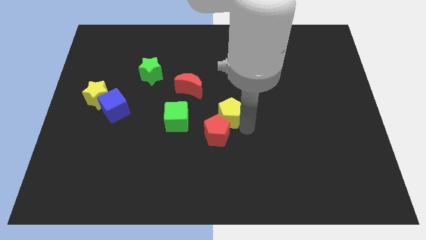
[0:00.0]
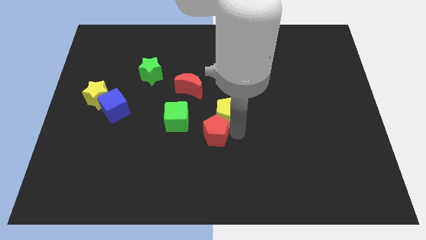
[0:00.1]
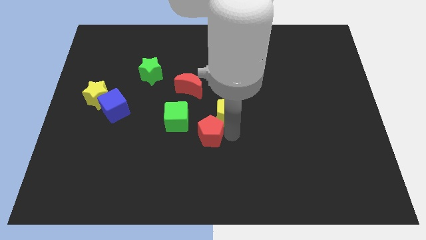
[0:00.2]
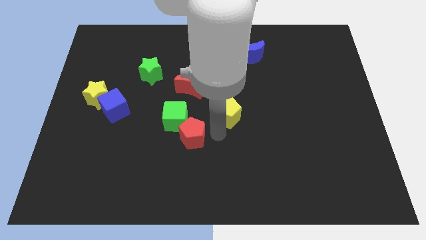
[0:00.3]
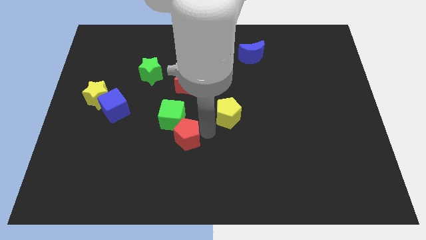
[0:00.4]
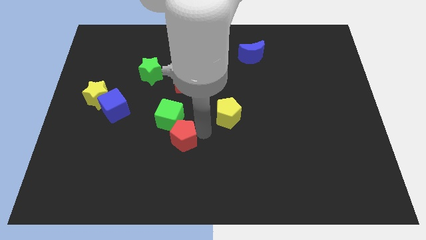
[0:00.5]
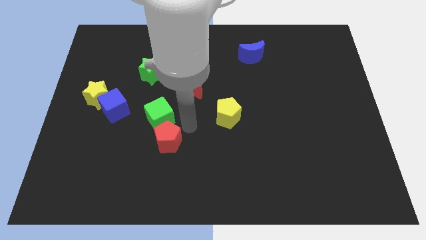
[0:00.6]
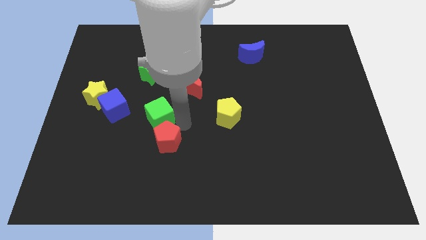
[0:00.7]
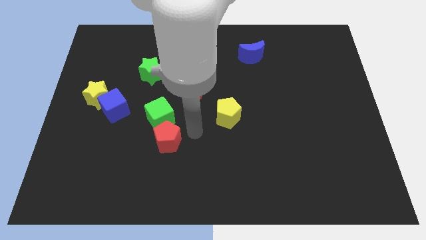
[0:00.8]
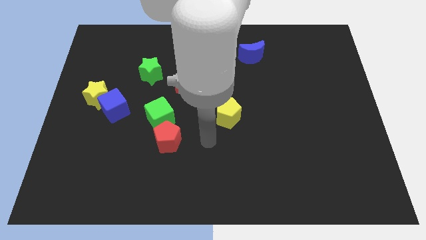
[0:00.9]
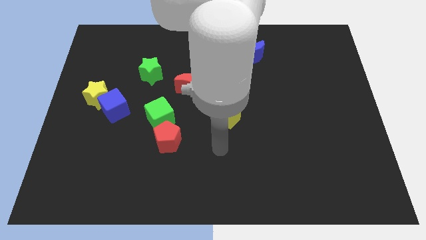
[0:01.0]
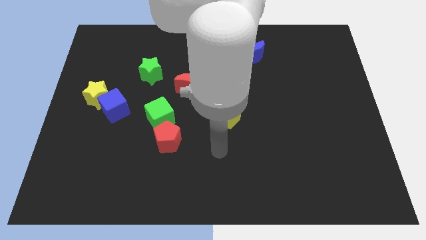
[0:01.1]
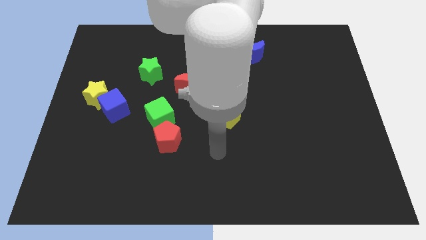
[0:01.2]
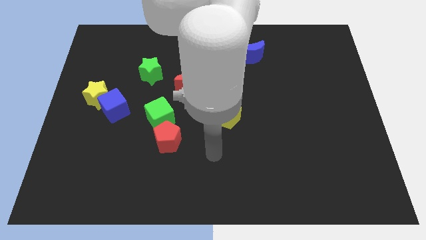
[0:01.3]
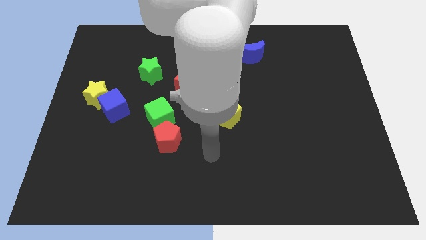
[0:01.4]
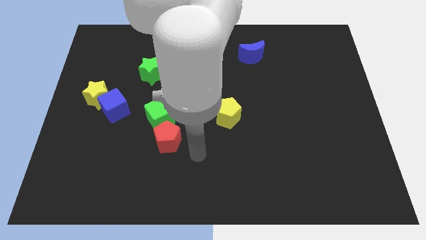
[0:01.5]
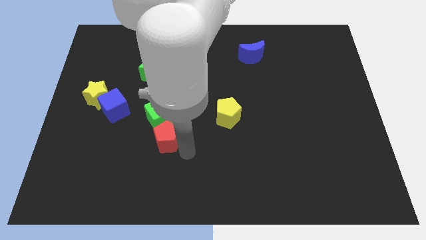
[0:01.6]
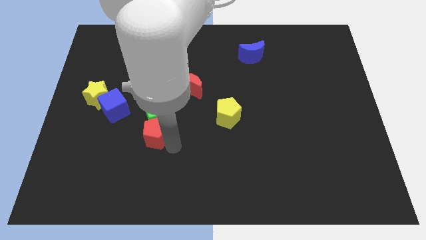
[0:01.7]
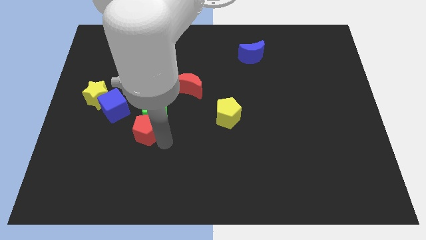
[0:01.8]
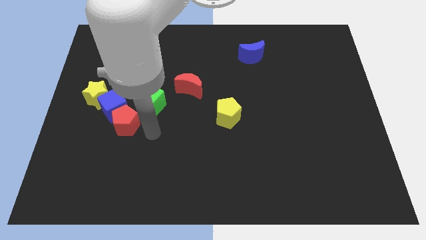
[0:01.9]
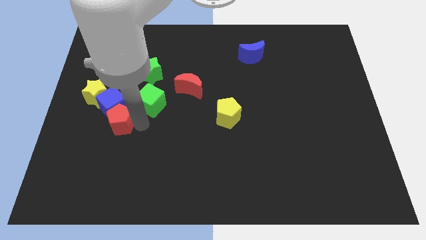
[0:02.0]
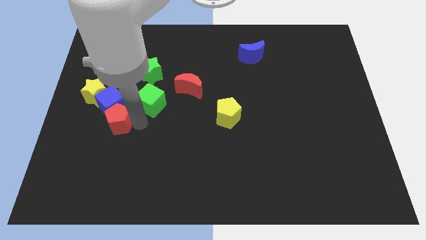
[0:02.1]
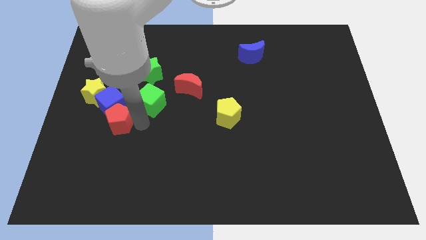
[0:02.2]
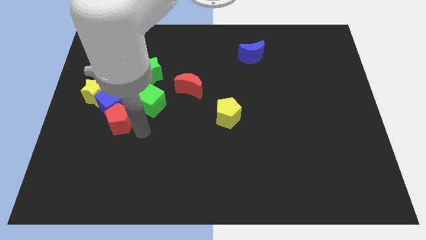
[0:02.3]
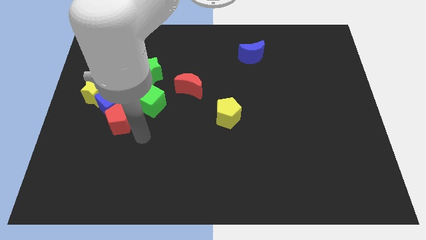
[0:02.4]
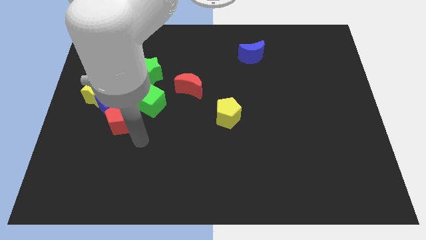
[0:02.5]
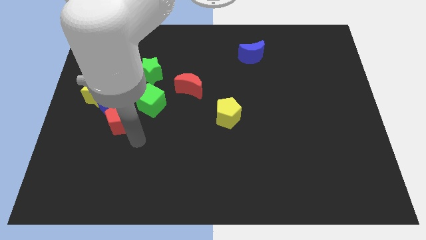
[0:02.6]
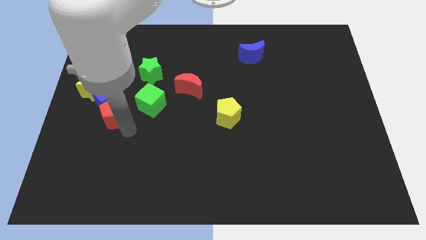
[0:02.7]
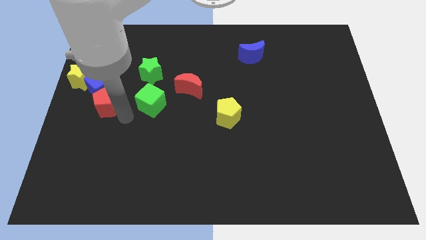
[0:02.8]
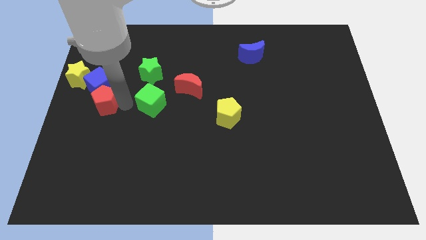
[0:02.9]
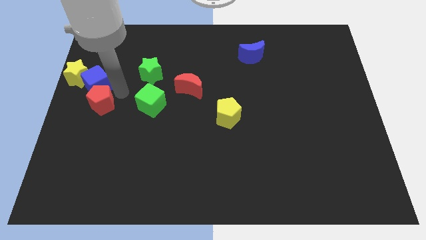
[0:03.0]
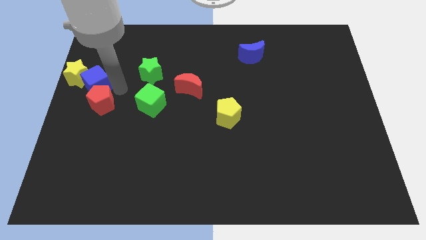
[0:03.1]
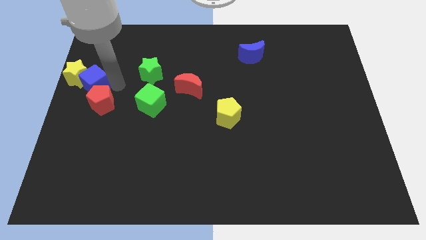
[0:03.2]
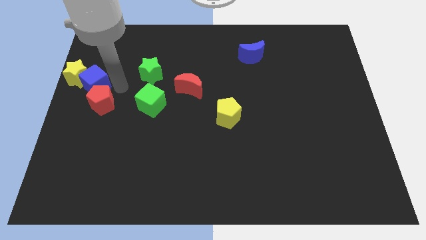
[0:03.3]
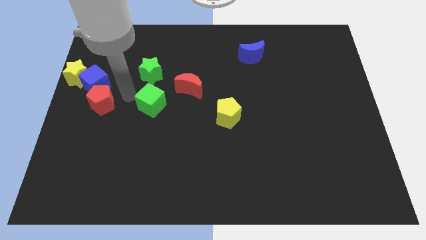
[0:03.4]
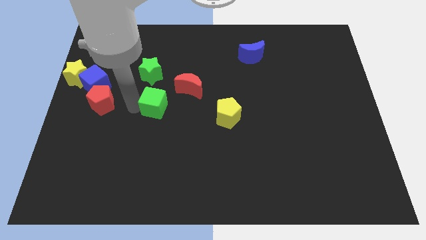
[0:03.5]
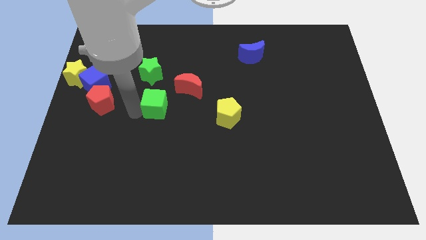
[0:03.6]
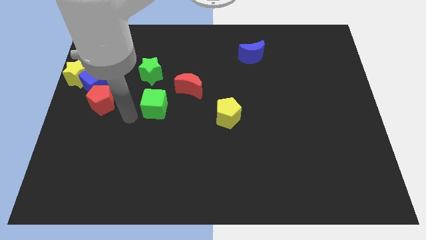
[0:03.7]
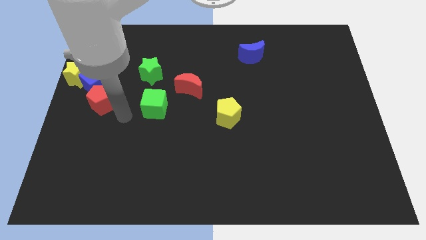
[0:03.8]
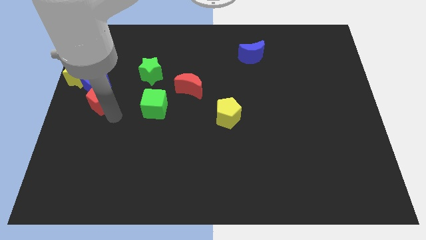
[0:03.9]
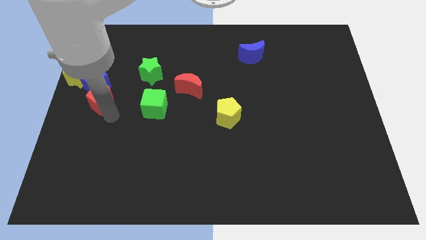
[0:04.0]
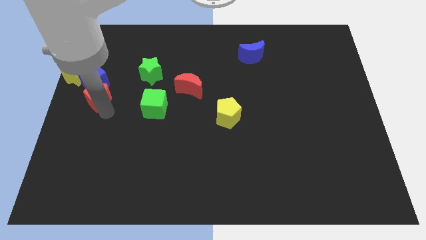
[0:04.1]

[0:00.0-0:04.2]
move red pentagon to the bottom of blue cube

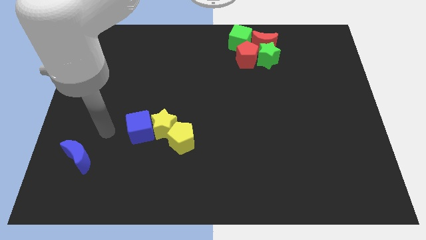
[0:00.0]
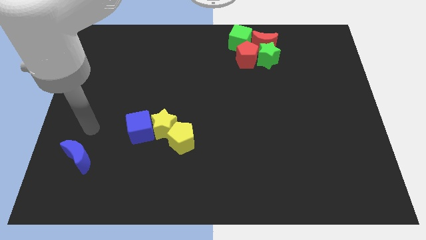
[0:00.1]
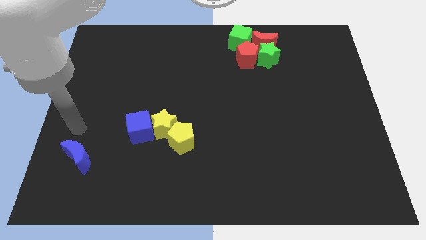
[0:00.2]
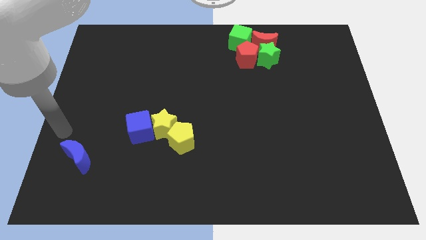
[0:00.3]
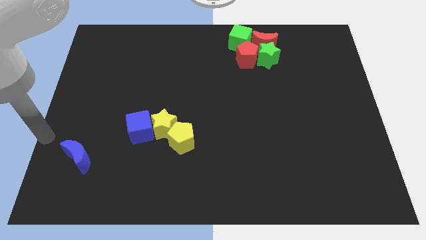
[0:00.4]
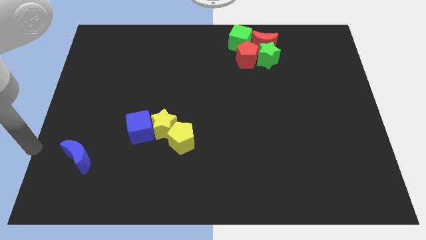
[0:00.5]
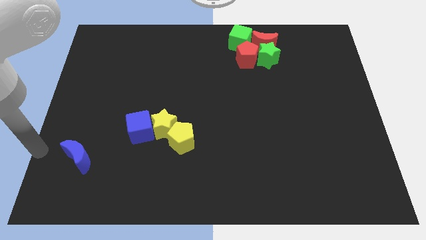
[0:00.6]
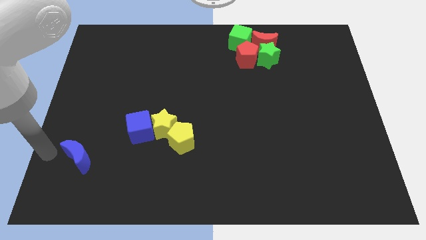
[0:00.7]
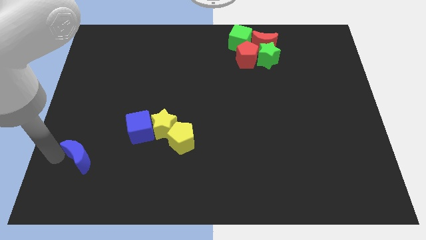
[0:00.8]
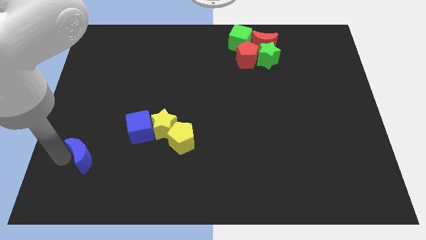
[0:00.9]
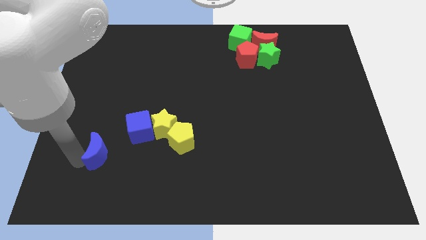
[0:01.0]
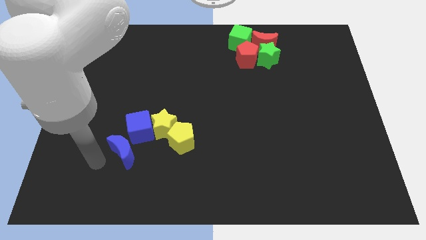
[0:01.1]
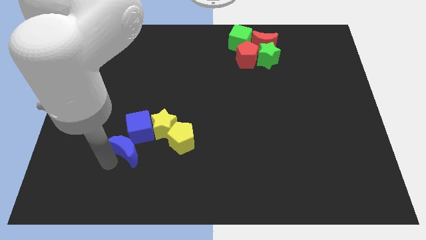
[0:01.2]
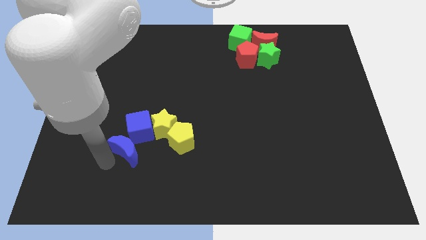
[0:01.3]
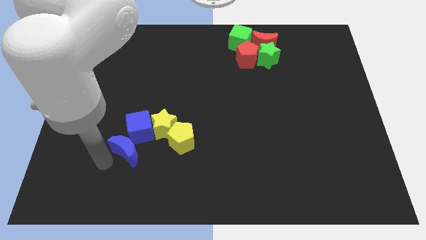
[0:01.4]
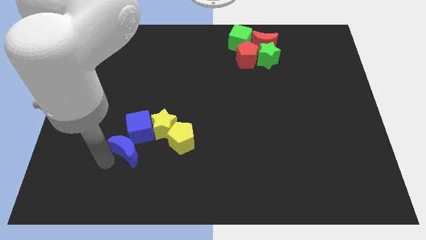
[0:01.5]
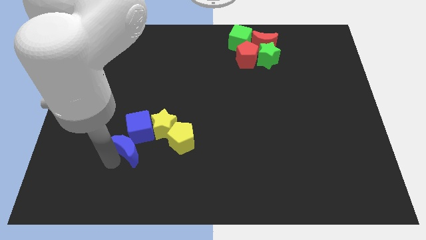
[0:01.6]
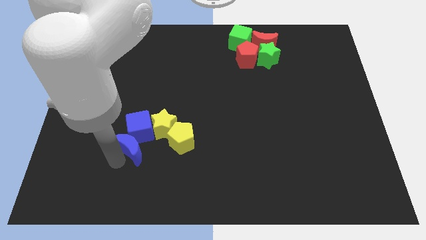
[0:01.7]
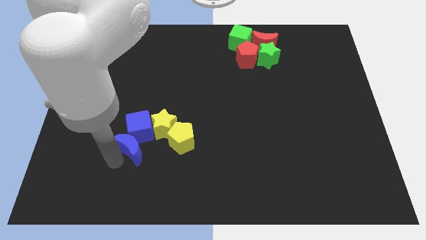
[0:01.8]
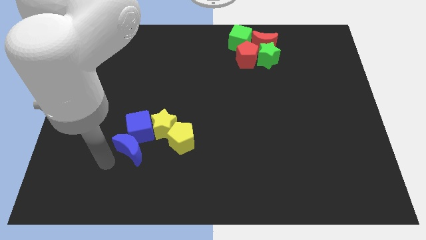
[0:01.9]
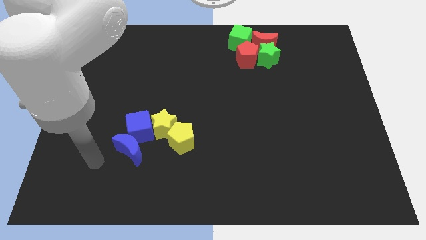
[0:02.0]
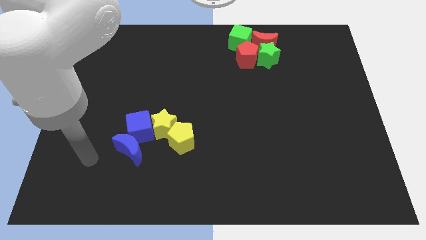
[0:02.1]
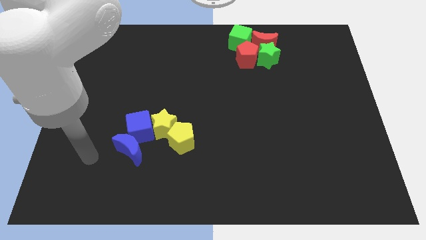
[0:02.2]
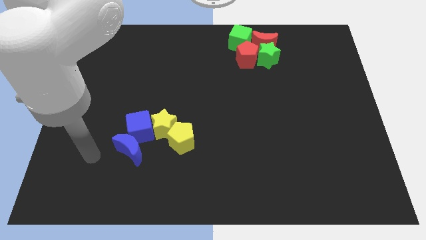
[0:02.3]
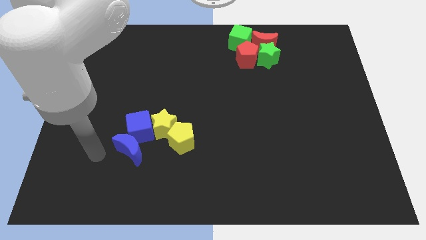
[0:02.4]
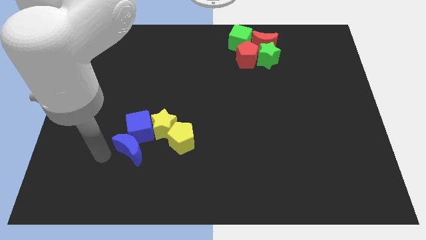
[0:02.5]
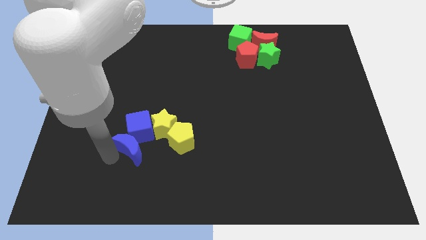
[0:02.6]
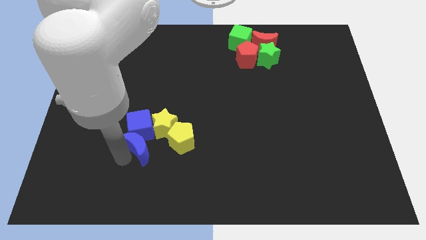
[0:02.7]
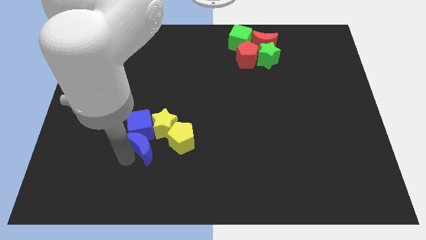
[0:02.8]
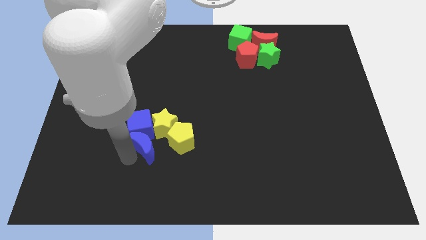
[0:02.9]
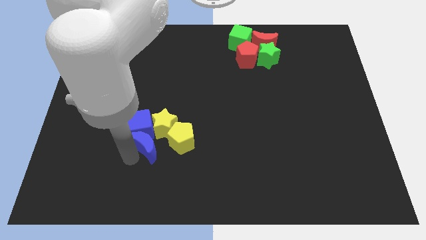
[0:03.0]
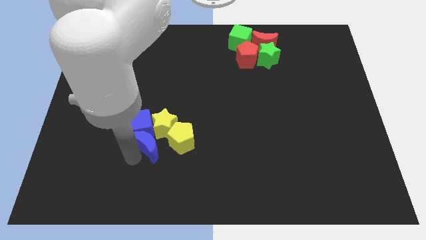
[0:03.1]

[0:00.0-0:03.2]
move blue crescent into the blue cube to the bottom left

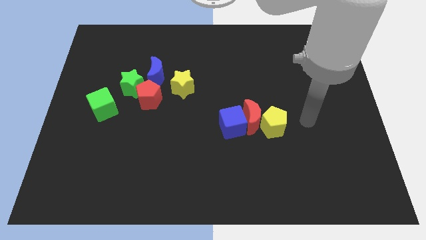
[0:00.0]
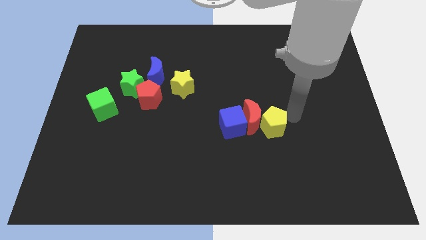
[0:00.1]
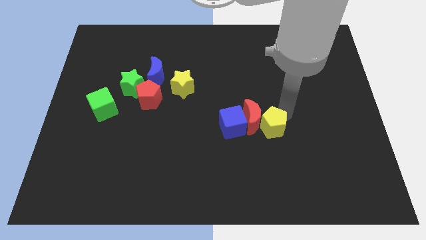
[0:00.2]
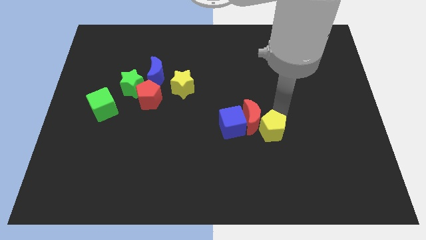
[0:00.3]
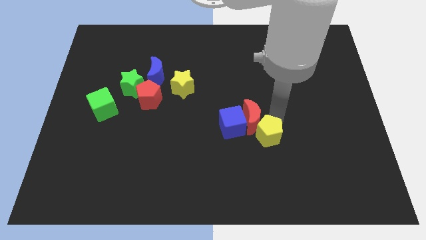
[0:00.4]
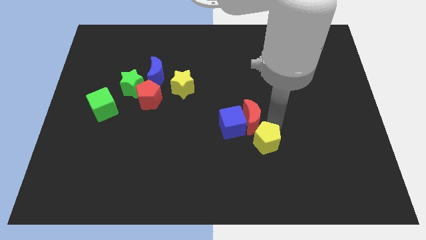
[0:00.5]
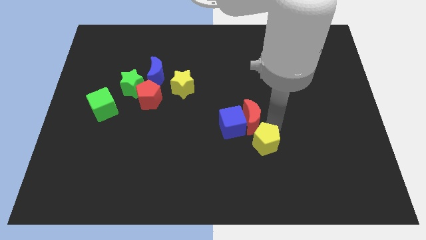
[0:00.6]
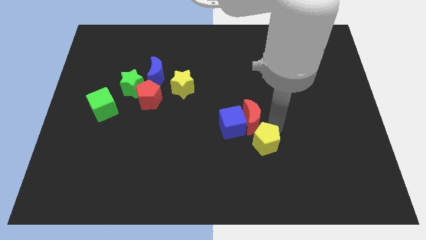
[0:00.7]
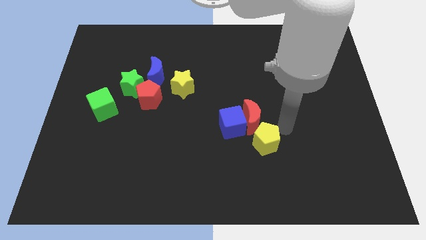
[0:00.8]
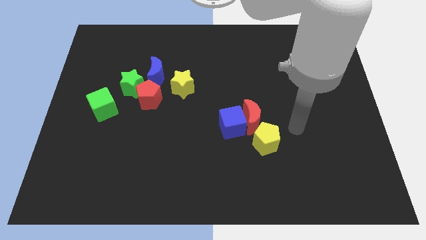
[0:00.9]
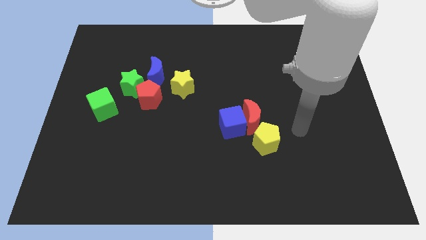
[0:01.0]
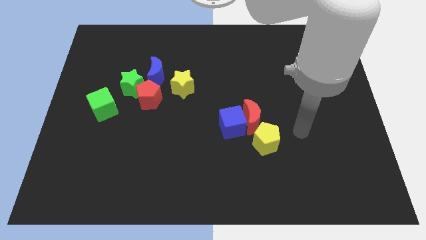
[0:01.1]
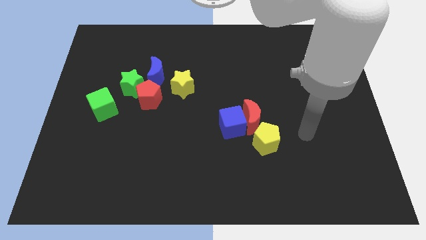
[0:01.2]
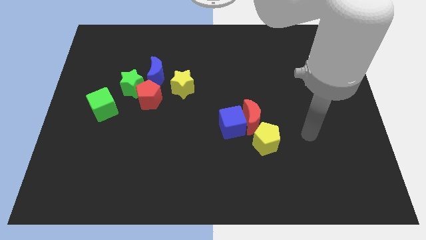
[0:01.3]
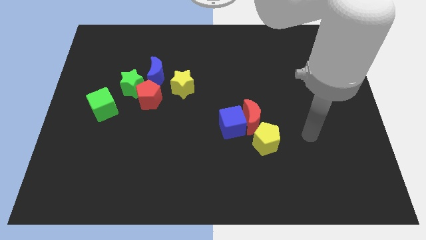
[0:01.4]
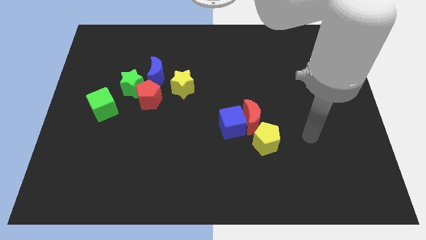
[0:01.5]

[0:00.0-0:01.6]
place the yellow pentagon at the bottom right side of the red moon
